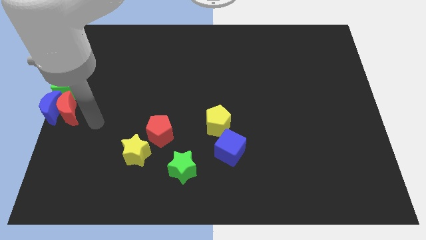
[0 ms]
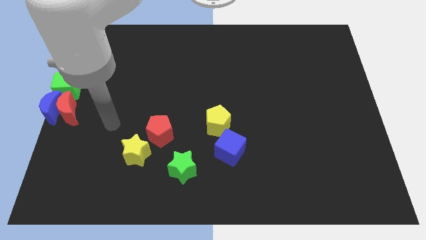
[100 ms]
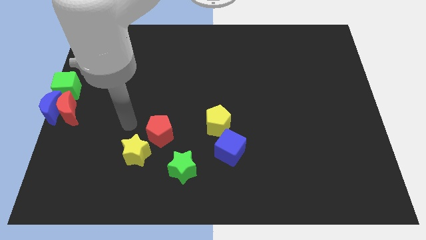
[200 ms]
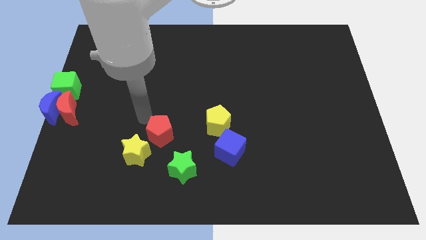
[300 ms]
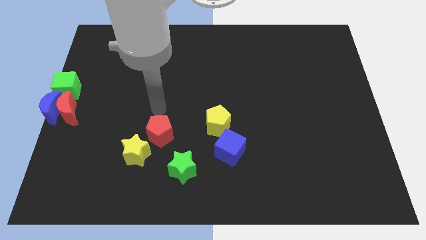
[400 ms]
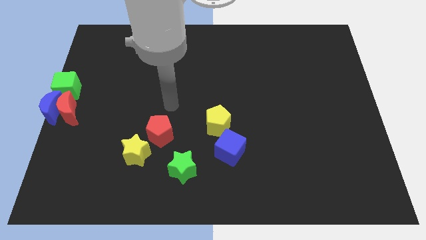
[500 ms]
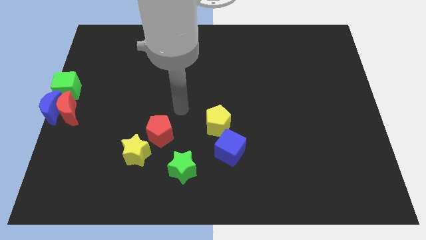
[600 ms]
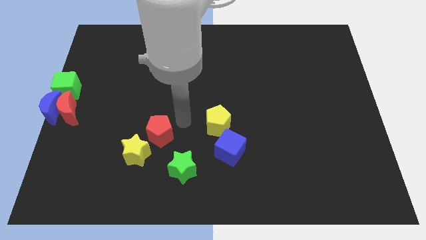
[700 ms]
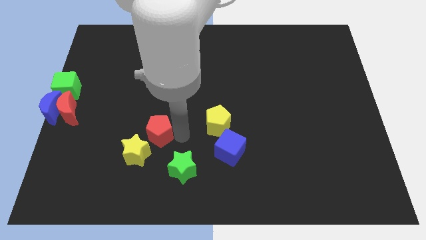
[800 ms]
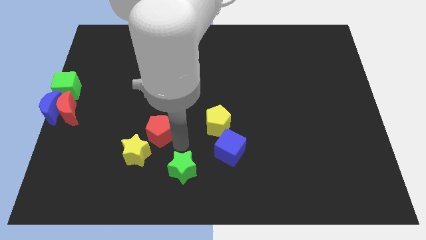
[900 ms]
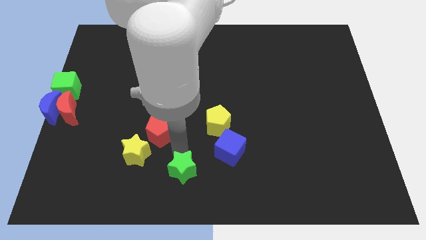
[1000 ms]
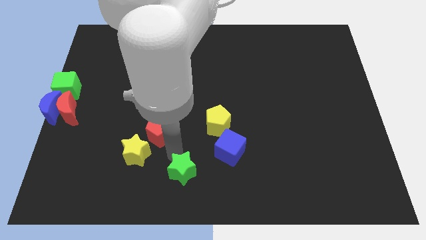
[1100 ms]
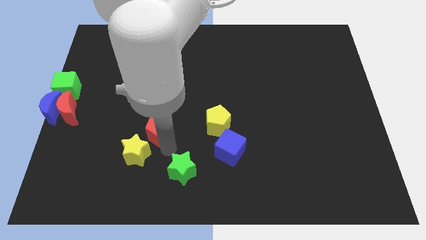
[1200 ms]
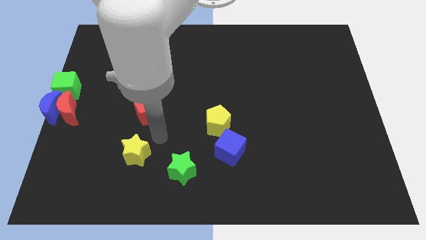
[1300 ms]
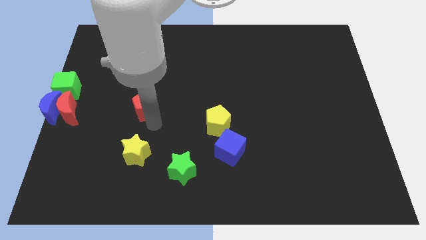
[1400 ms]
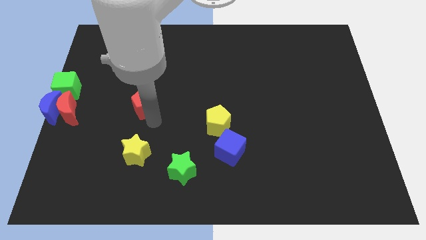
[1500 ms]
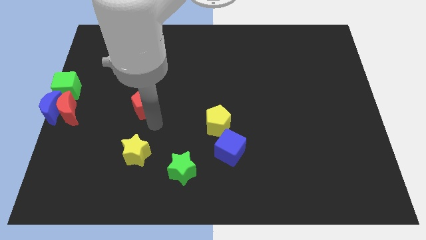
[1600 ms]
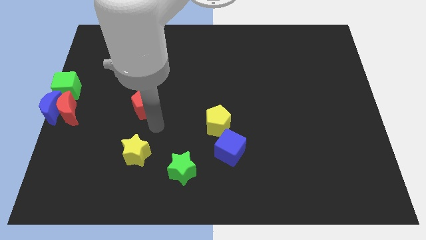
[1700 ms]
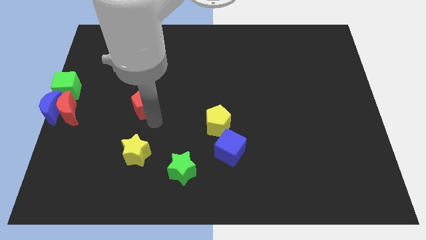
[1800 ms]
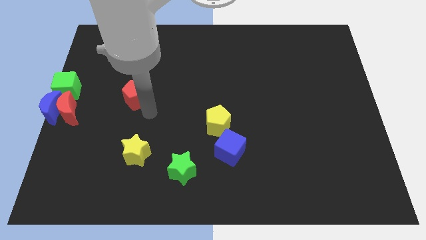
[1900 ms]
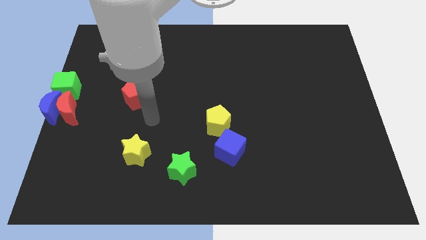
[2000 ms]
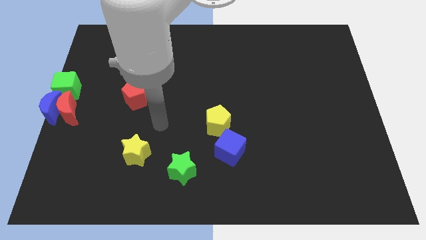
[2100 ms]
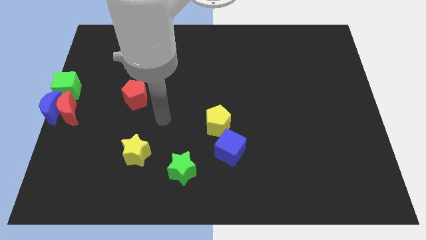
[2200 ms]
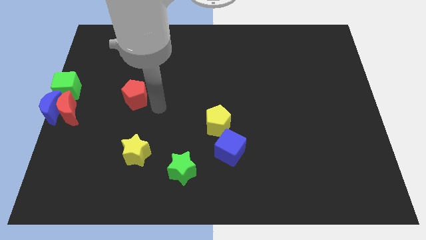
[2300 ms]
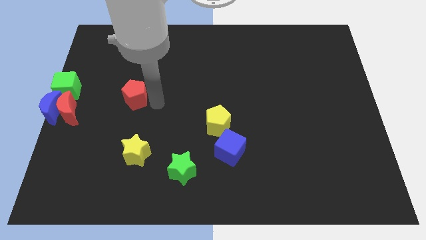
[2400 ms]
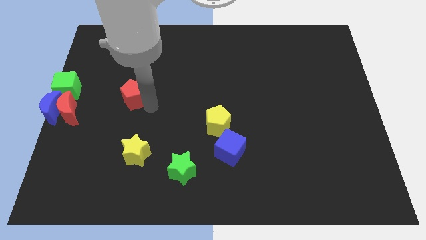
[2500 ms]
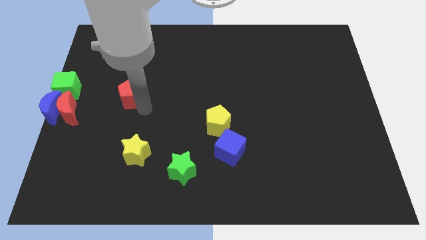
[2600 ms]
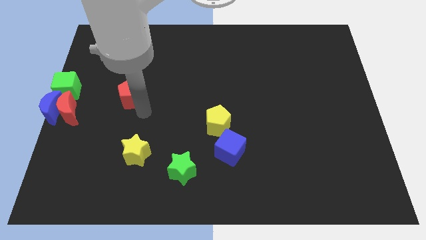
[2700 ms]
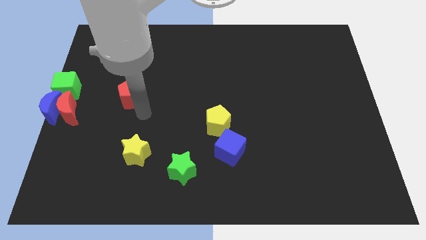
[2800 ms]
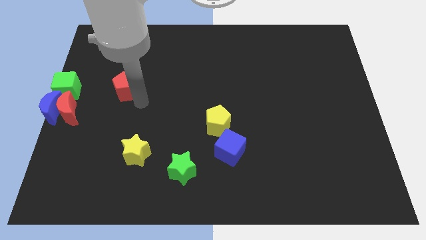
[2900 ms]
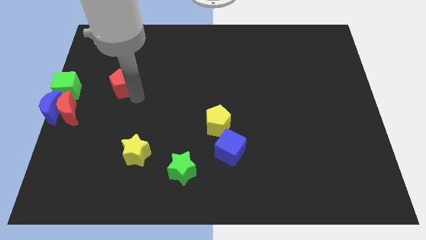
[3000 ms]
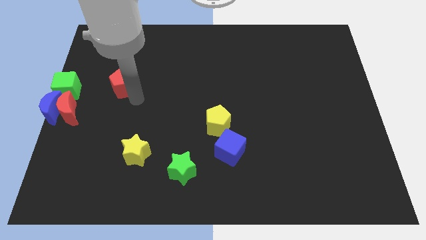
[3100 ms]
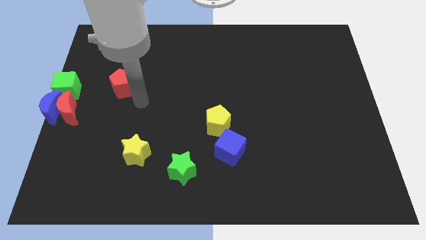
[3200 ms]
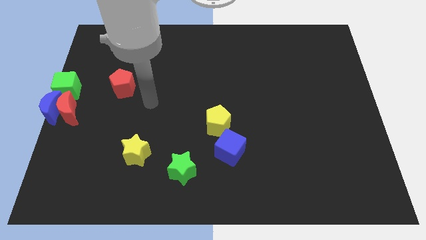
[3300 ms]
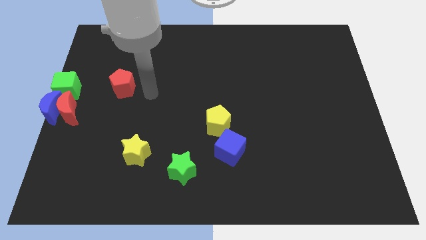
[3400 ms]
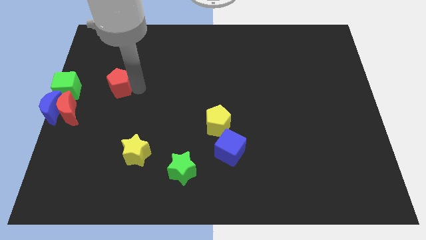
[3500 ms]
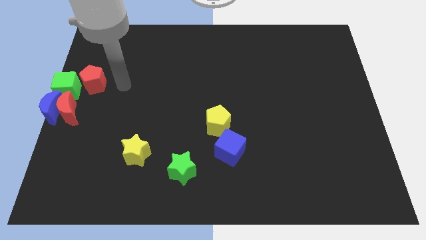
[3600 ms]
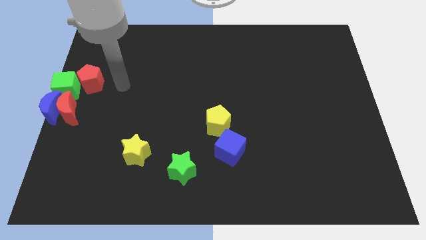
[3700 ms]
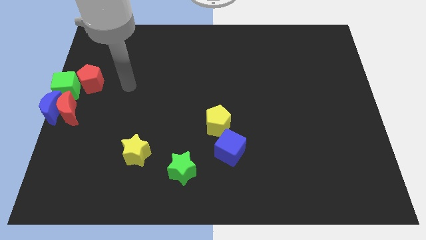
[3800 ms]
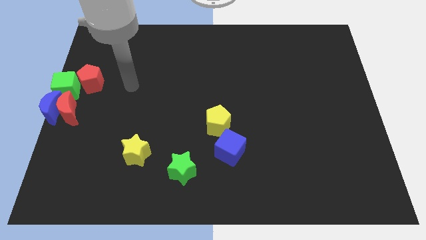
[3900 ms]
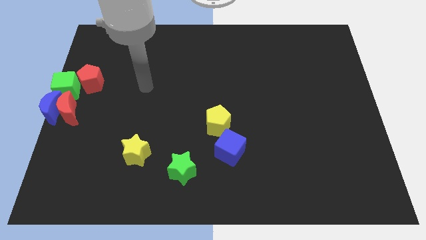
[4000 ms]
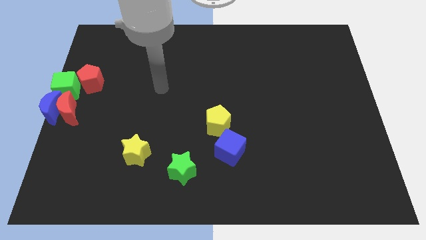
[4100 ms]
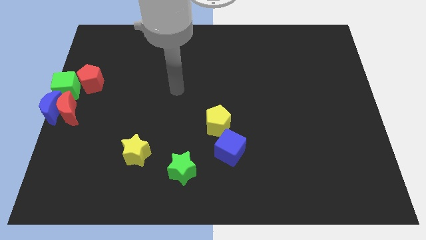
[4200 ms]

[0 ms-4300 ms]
move the red pentagon to the right of the green cube

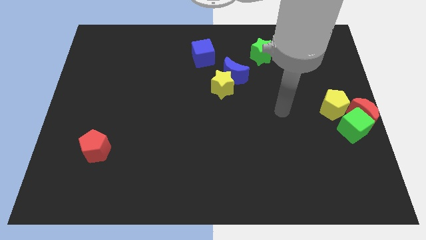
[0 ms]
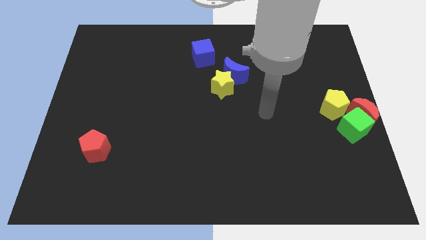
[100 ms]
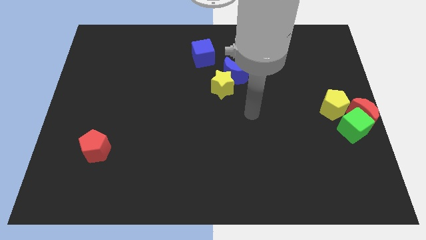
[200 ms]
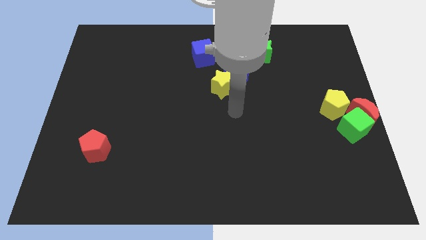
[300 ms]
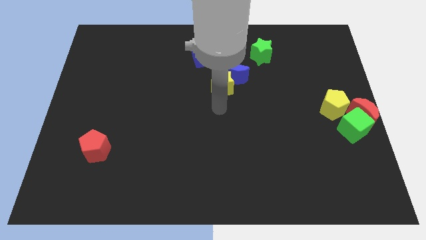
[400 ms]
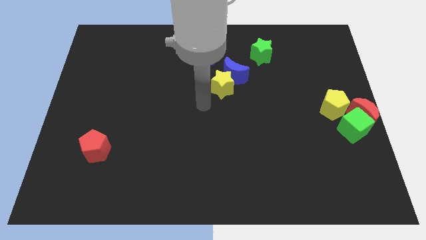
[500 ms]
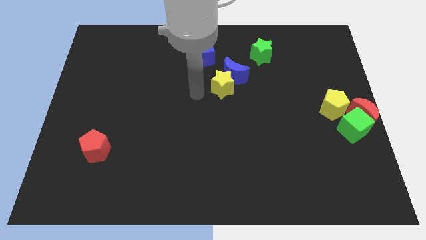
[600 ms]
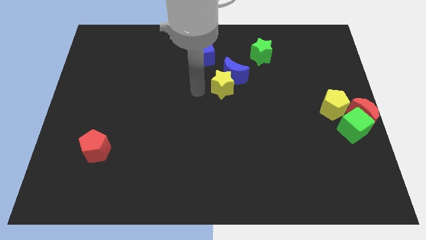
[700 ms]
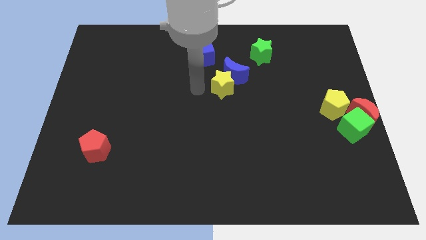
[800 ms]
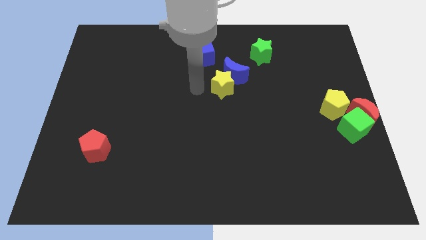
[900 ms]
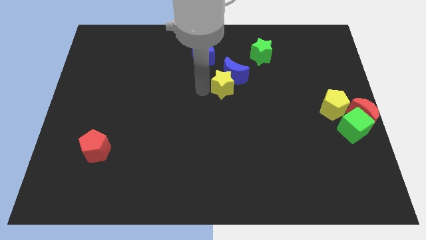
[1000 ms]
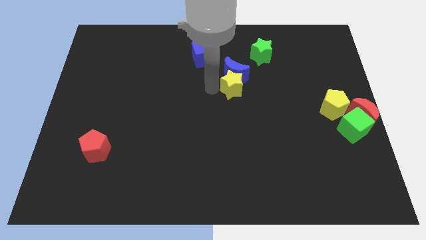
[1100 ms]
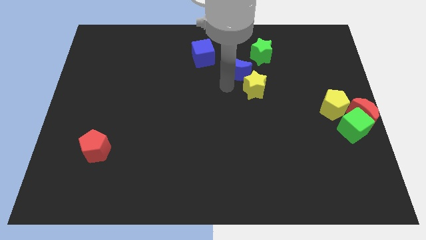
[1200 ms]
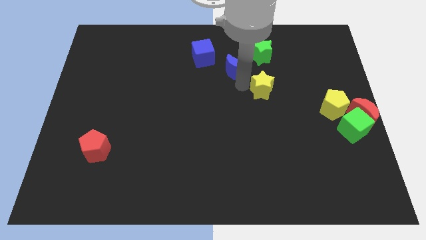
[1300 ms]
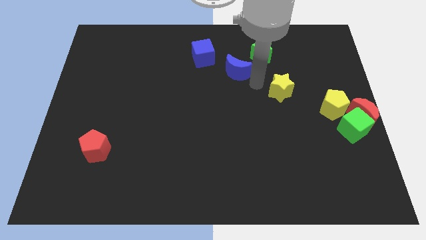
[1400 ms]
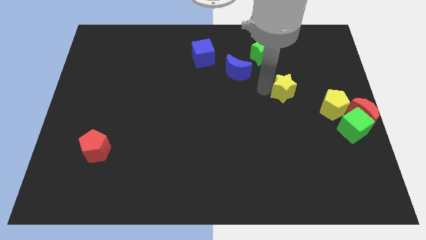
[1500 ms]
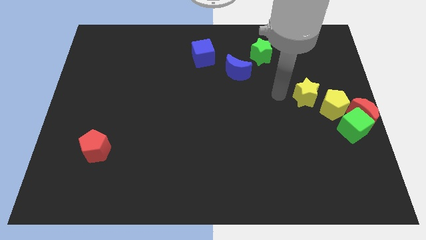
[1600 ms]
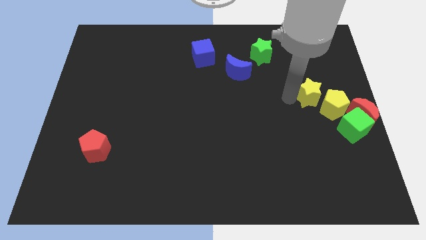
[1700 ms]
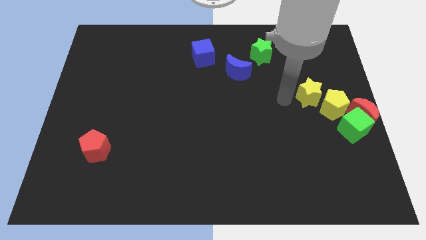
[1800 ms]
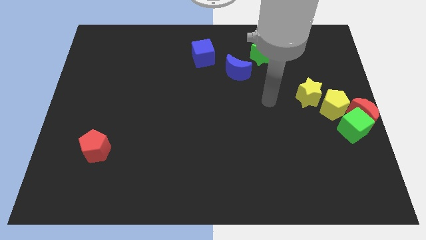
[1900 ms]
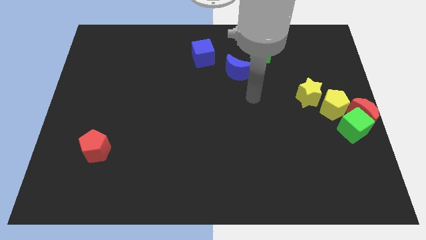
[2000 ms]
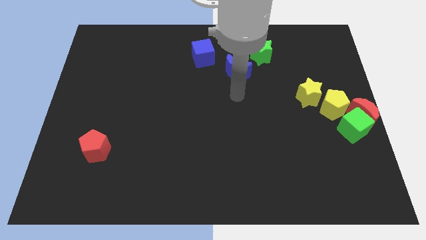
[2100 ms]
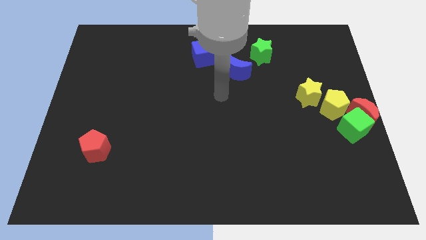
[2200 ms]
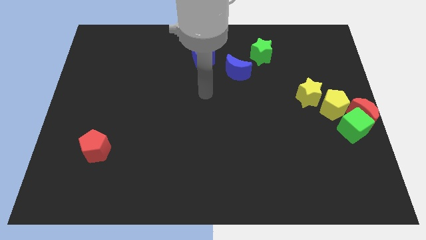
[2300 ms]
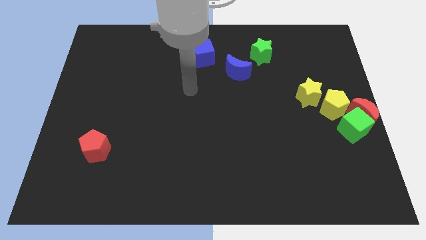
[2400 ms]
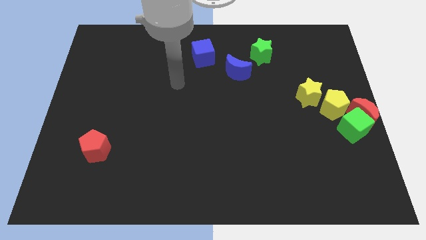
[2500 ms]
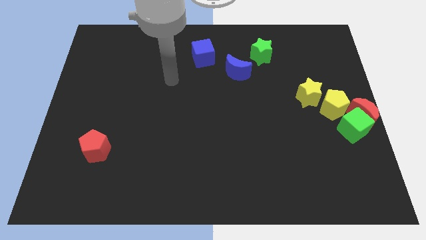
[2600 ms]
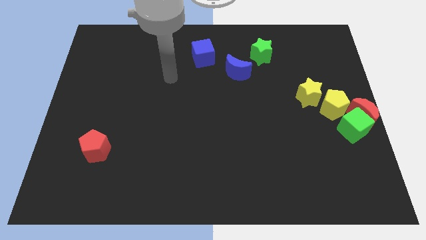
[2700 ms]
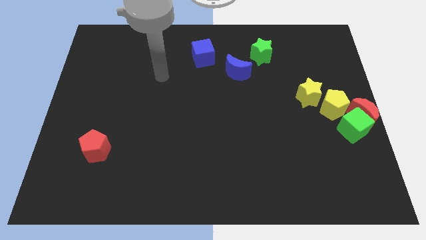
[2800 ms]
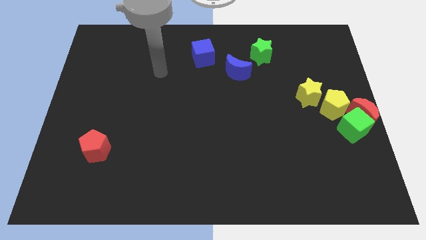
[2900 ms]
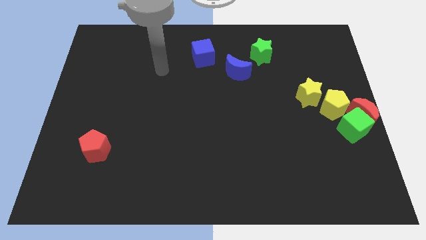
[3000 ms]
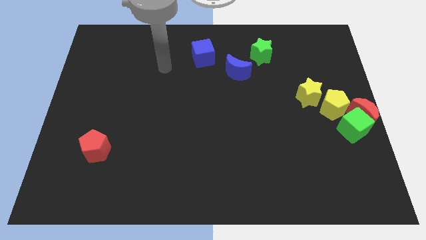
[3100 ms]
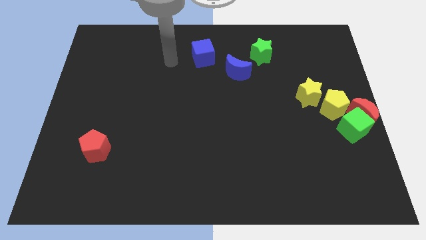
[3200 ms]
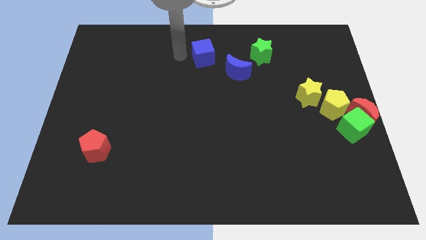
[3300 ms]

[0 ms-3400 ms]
move the yellow star to the top left side of the yellow pentagon

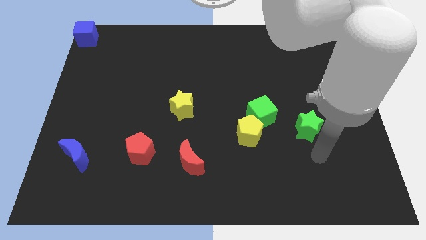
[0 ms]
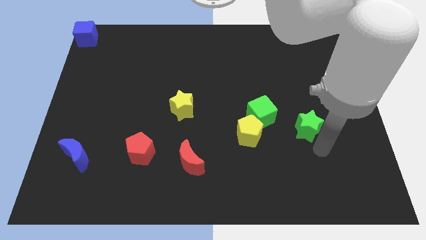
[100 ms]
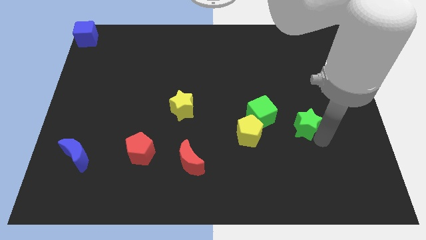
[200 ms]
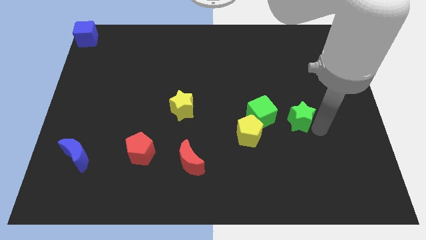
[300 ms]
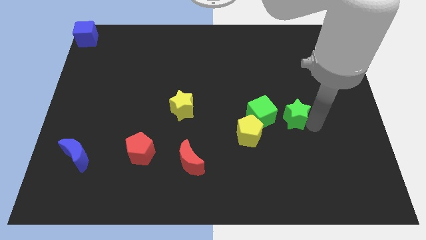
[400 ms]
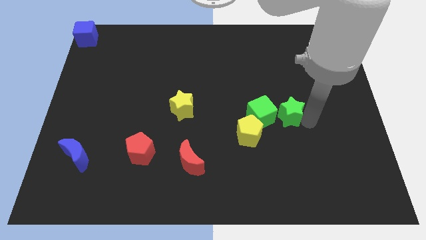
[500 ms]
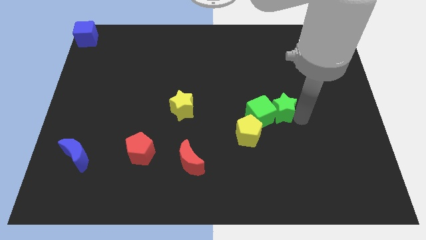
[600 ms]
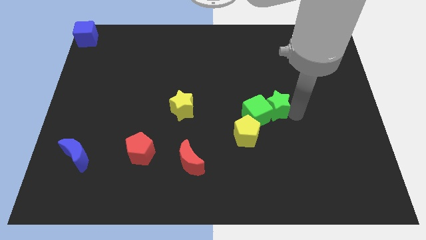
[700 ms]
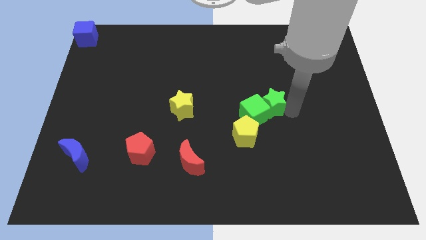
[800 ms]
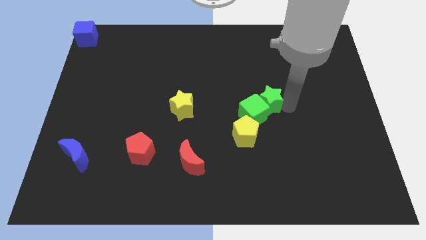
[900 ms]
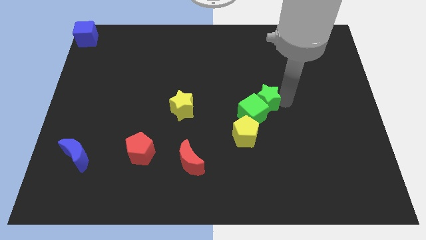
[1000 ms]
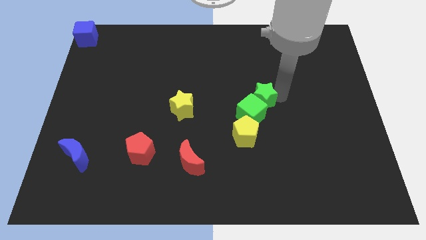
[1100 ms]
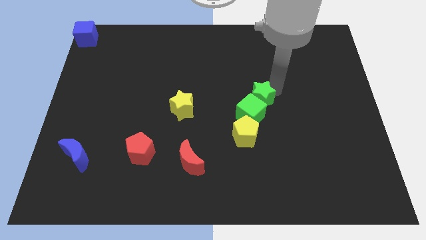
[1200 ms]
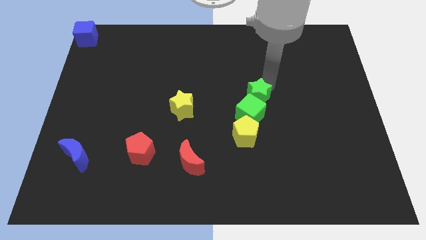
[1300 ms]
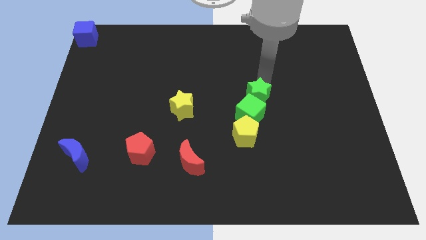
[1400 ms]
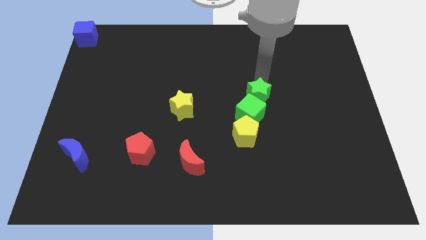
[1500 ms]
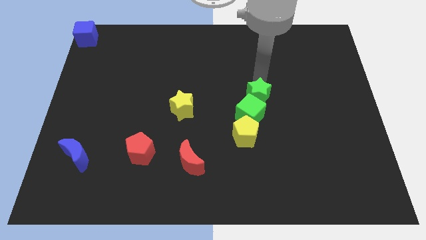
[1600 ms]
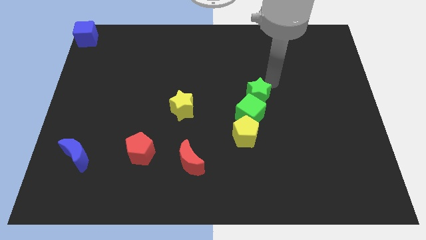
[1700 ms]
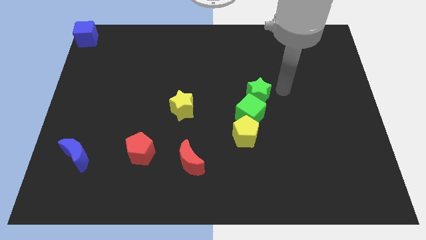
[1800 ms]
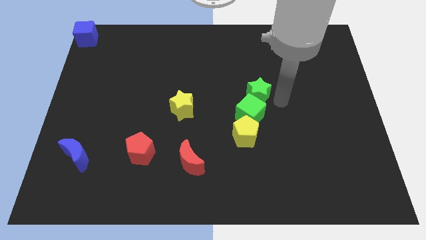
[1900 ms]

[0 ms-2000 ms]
place the green star on top of the green cube on the board
